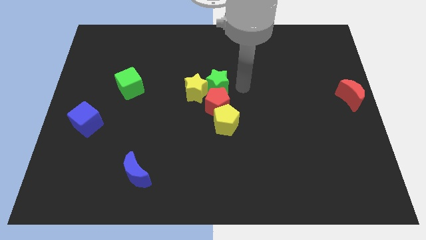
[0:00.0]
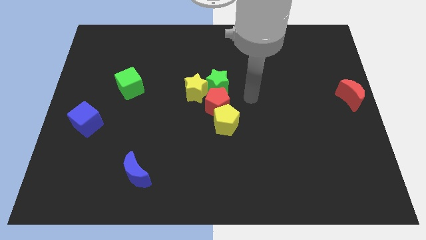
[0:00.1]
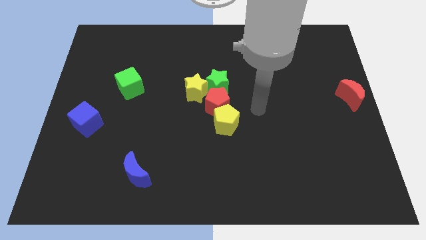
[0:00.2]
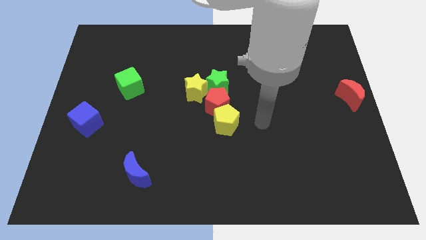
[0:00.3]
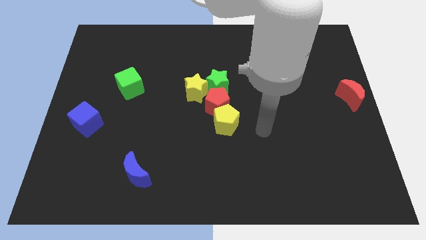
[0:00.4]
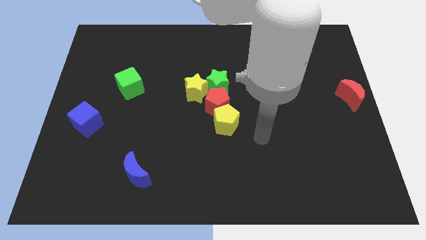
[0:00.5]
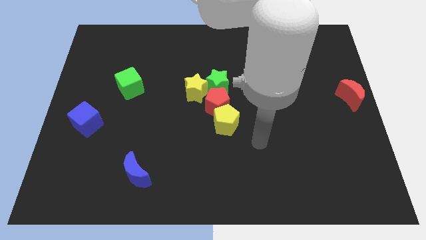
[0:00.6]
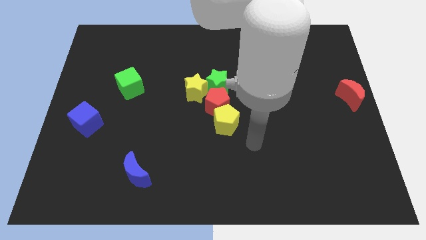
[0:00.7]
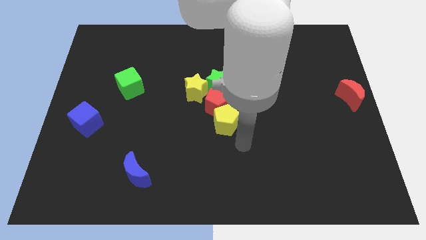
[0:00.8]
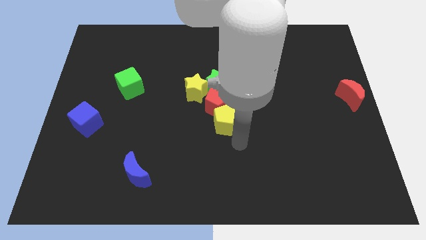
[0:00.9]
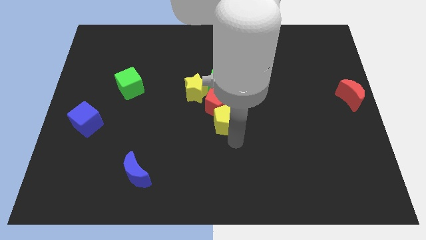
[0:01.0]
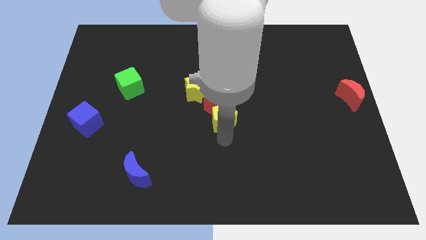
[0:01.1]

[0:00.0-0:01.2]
move your arm to the bottom of yellow pentagon

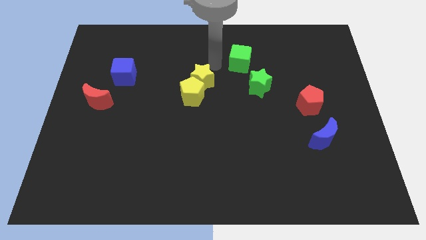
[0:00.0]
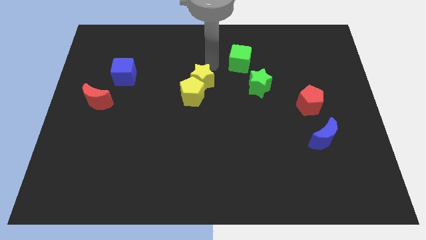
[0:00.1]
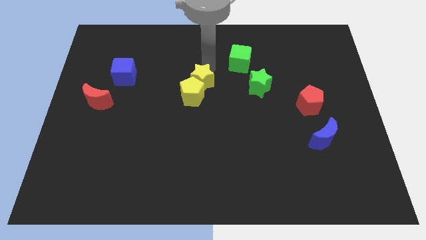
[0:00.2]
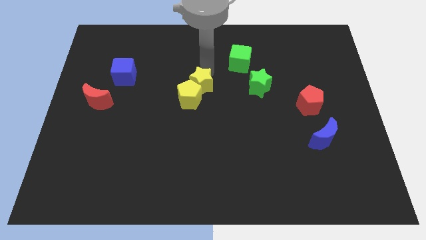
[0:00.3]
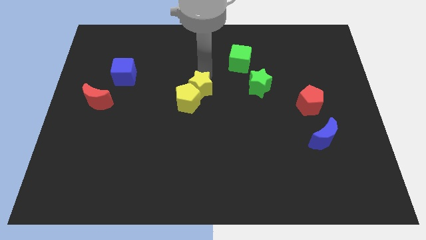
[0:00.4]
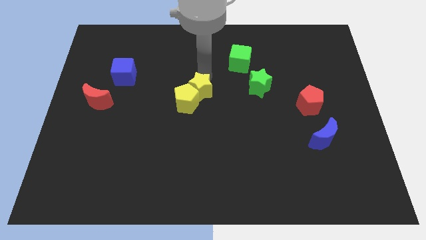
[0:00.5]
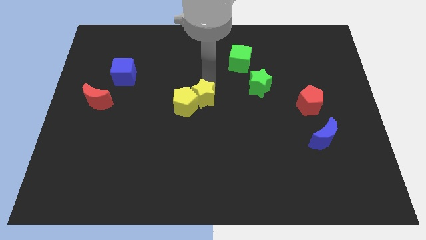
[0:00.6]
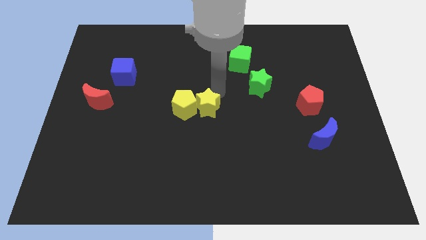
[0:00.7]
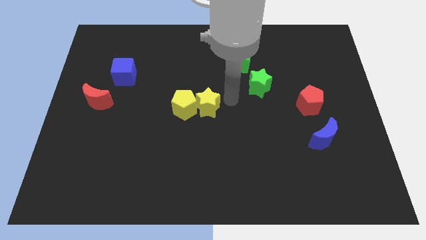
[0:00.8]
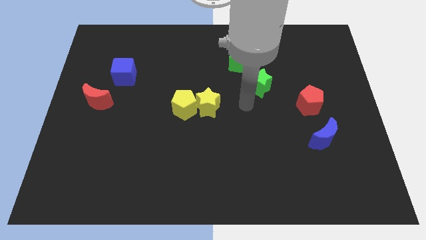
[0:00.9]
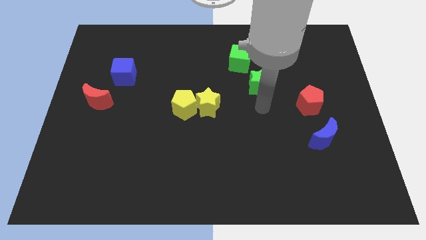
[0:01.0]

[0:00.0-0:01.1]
place the yellow star right to the yellow pentagon

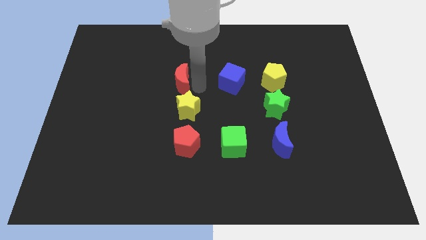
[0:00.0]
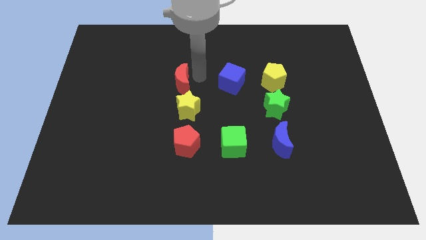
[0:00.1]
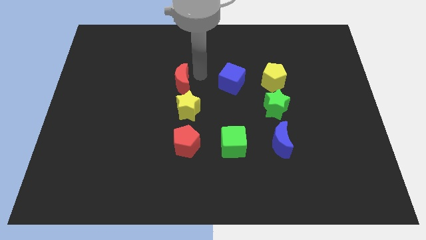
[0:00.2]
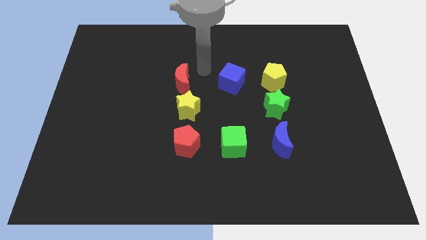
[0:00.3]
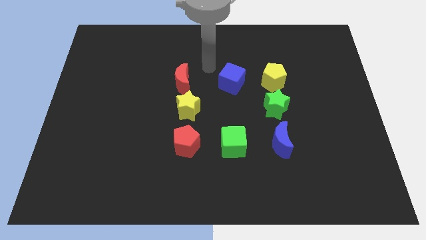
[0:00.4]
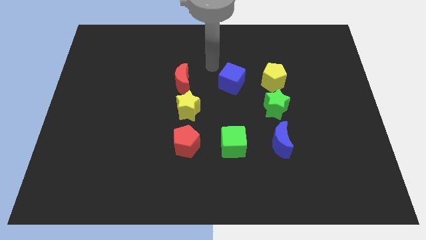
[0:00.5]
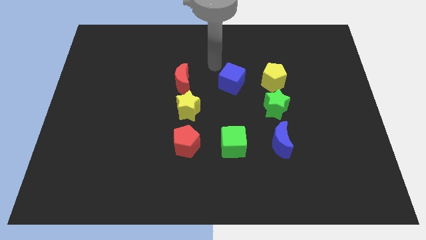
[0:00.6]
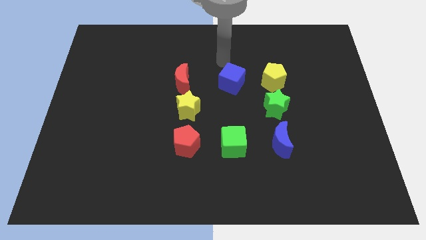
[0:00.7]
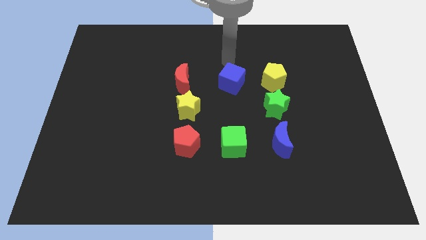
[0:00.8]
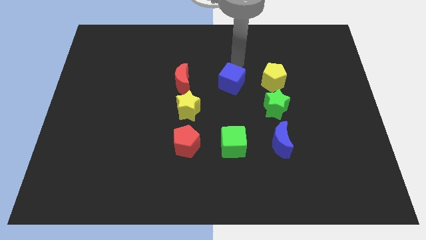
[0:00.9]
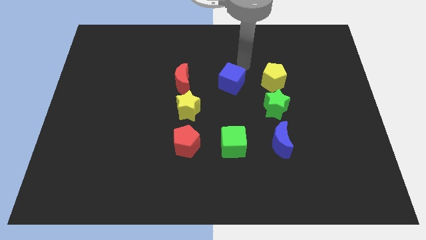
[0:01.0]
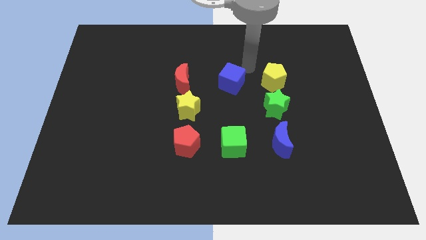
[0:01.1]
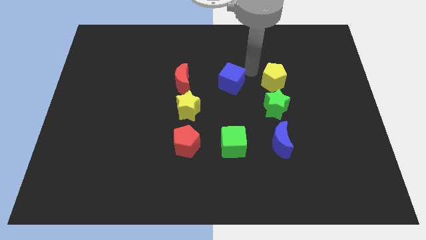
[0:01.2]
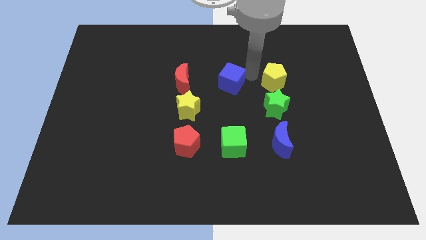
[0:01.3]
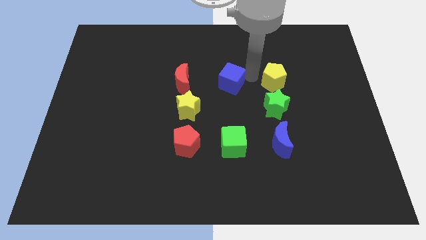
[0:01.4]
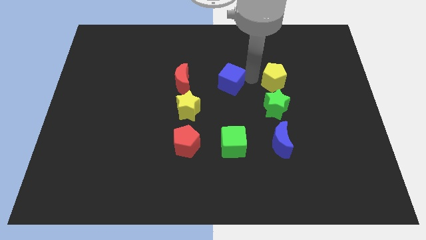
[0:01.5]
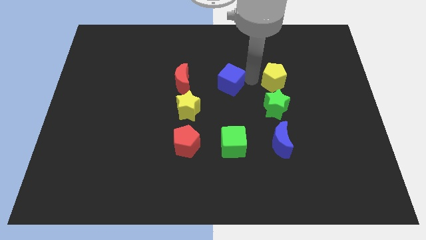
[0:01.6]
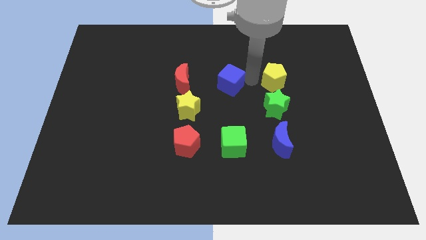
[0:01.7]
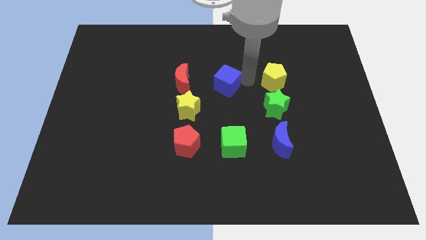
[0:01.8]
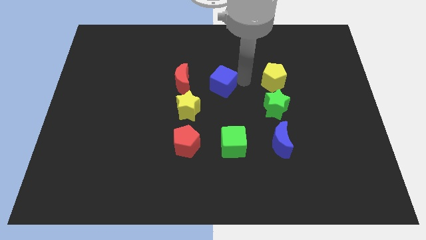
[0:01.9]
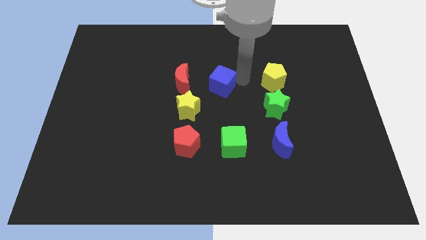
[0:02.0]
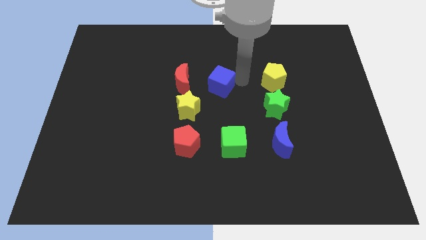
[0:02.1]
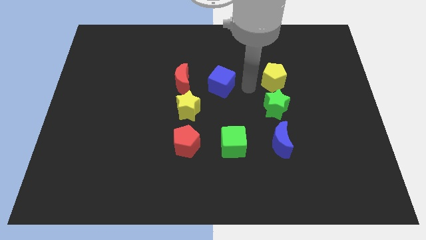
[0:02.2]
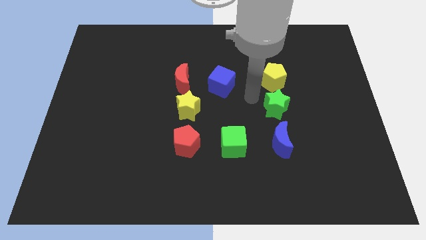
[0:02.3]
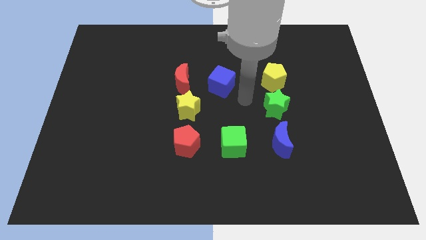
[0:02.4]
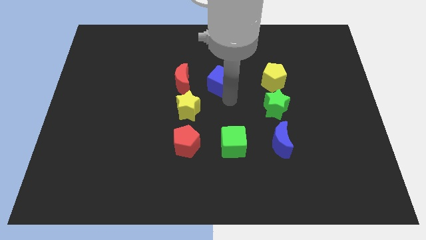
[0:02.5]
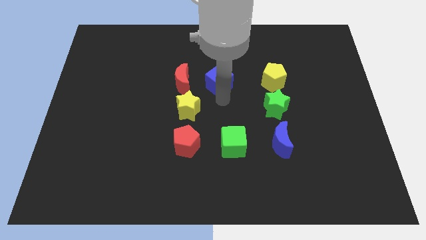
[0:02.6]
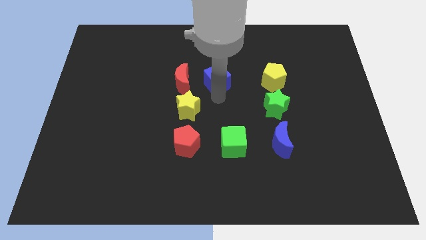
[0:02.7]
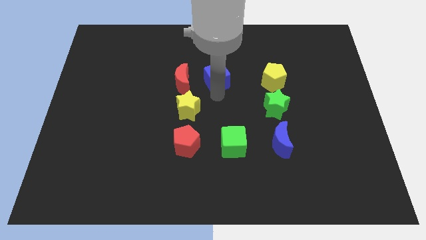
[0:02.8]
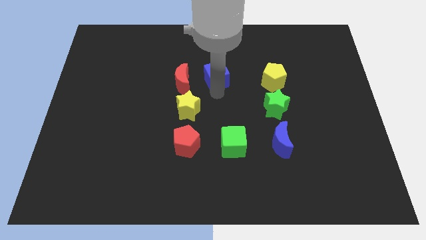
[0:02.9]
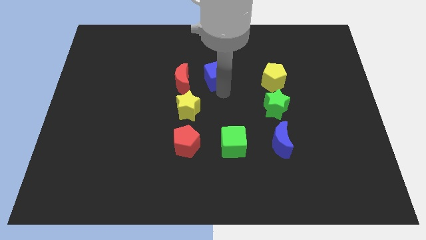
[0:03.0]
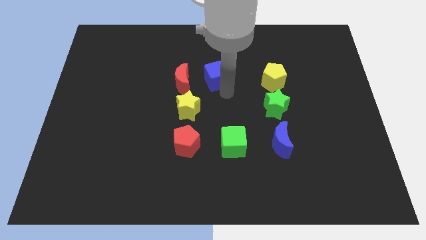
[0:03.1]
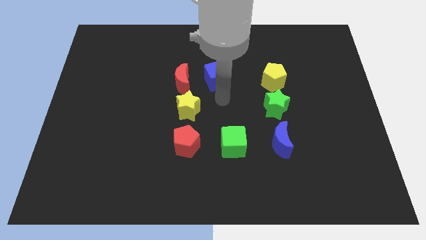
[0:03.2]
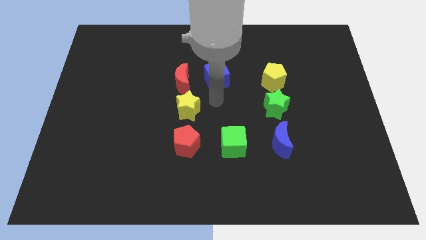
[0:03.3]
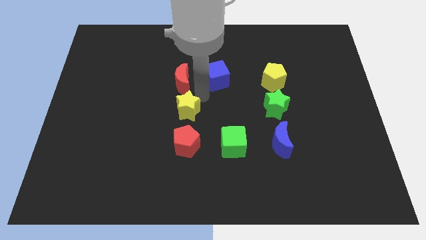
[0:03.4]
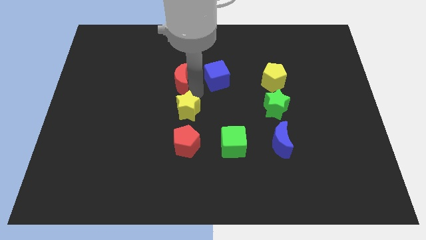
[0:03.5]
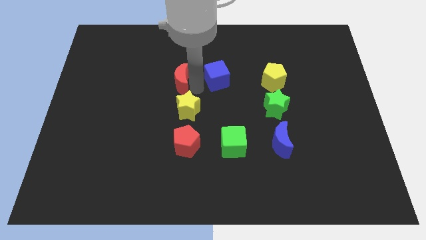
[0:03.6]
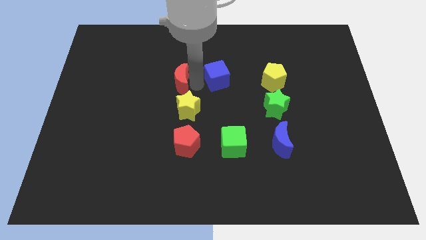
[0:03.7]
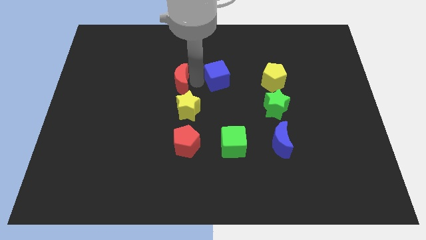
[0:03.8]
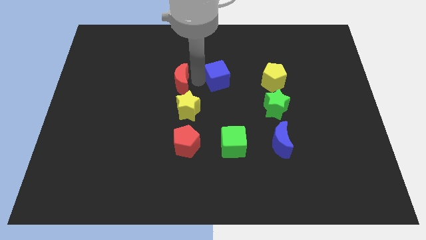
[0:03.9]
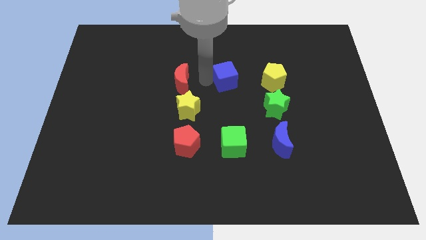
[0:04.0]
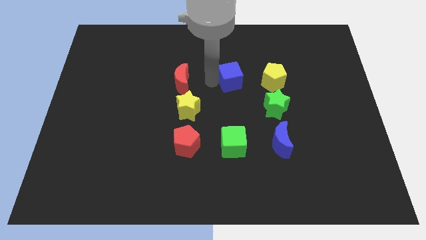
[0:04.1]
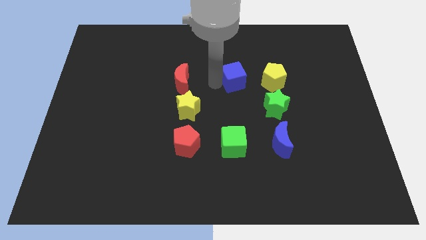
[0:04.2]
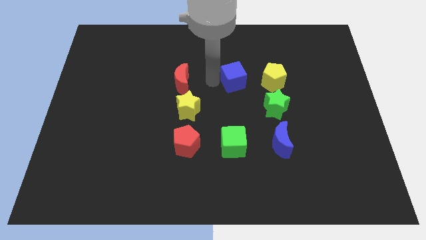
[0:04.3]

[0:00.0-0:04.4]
adjust the blue cube in between the red moon and yellow pentagon

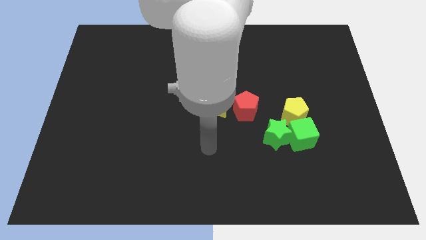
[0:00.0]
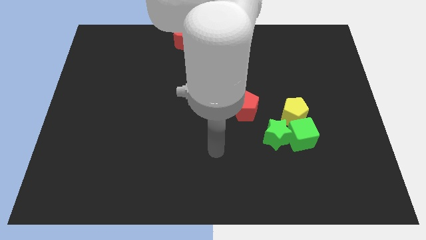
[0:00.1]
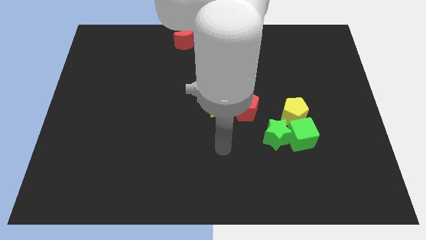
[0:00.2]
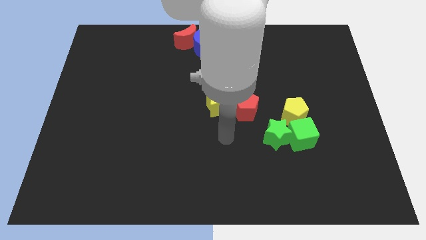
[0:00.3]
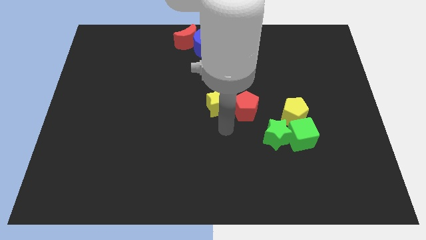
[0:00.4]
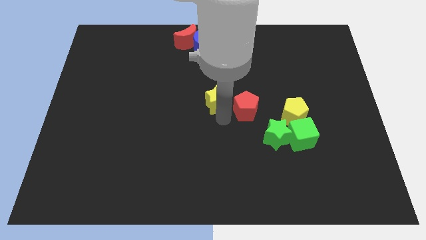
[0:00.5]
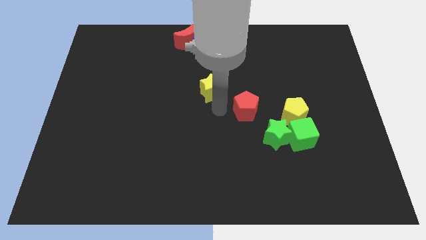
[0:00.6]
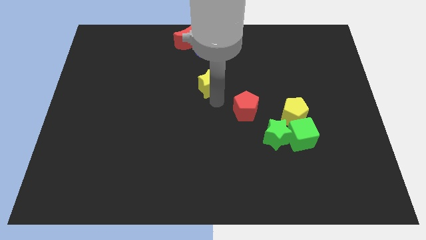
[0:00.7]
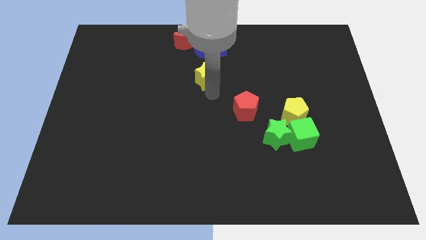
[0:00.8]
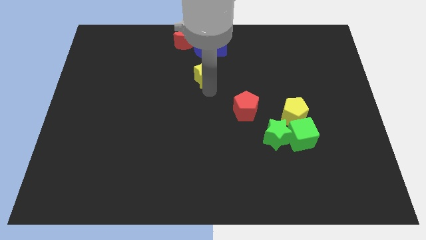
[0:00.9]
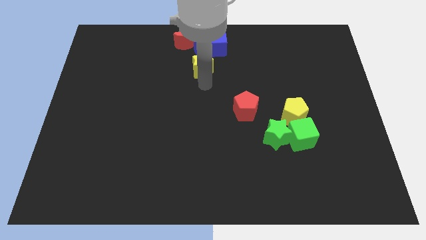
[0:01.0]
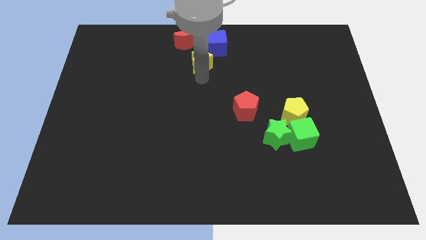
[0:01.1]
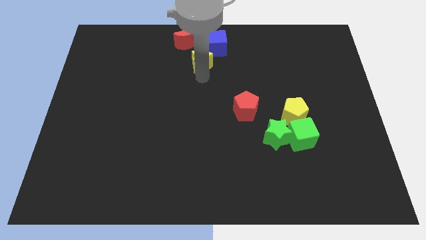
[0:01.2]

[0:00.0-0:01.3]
place the yellow star under the blue moon

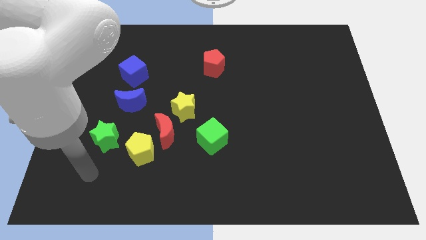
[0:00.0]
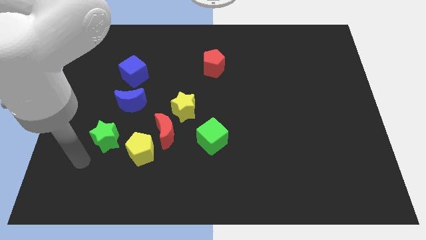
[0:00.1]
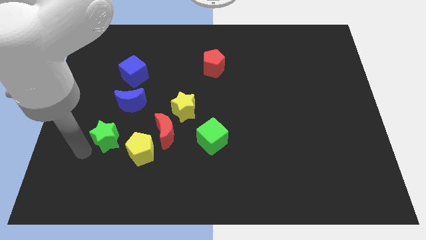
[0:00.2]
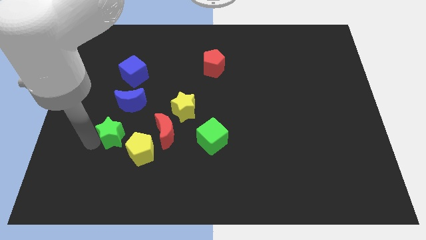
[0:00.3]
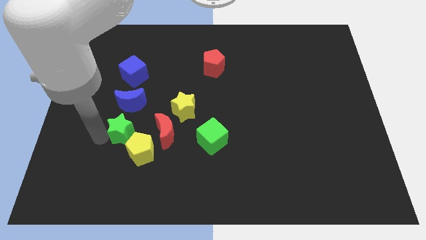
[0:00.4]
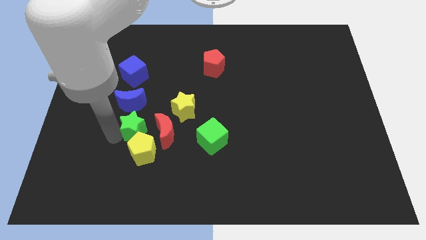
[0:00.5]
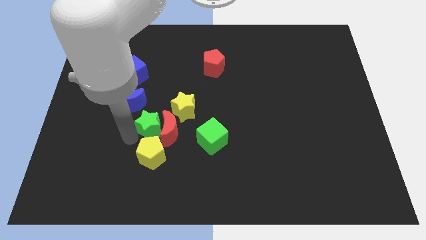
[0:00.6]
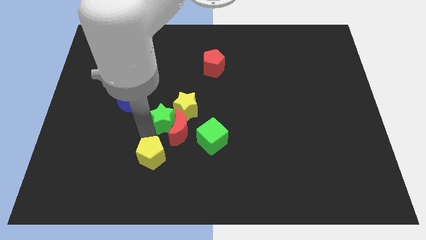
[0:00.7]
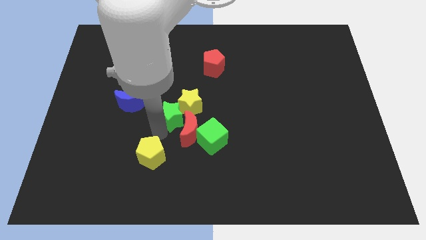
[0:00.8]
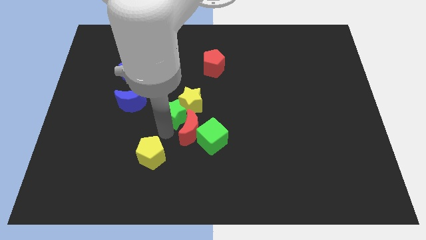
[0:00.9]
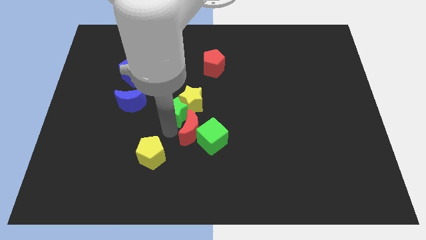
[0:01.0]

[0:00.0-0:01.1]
place the green star into the red crescent
